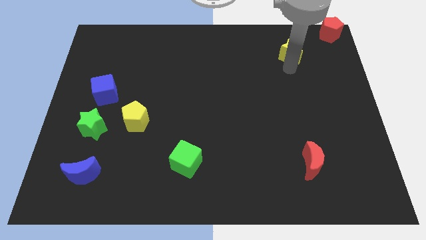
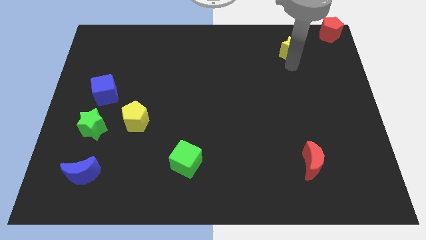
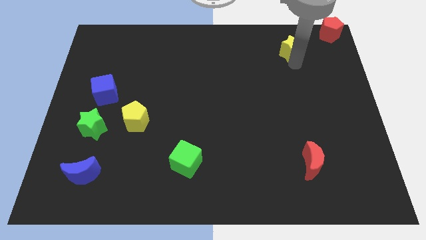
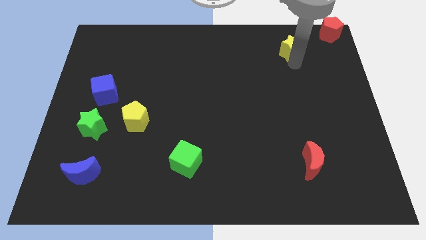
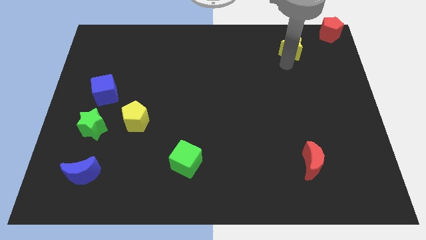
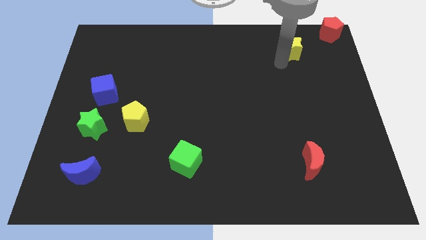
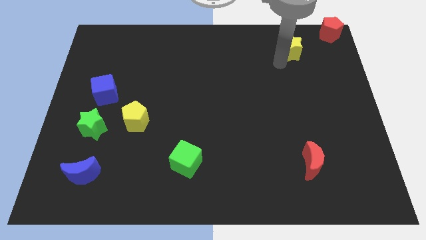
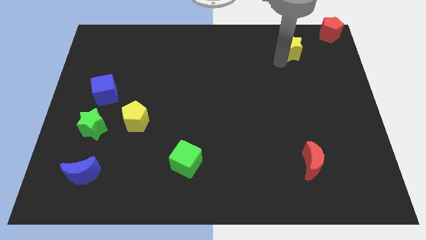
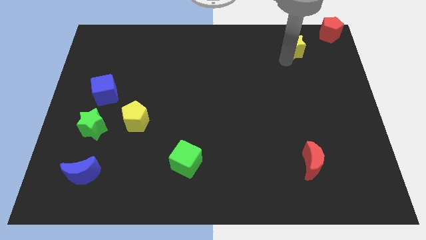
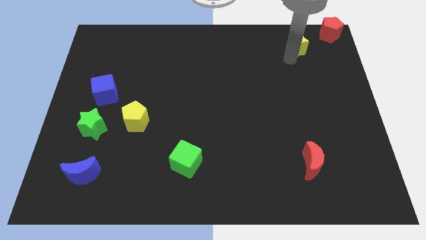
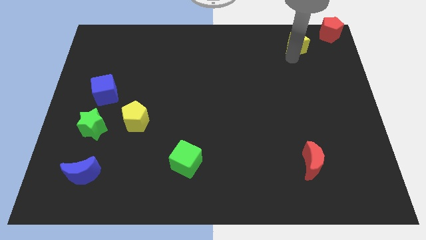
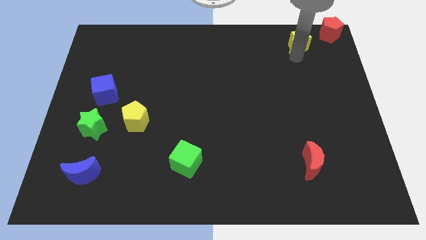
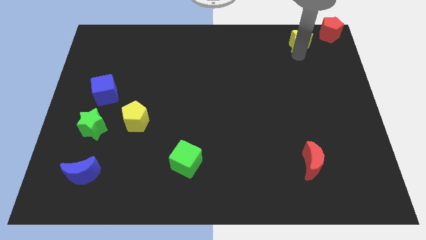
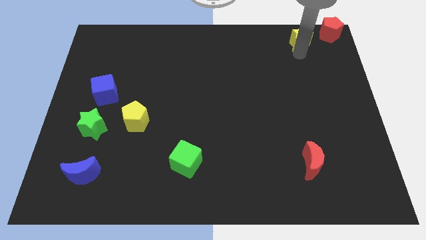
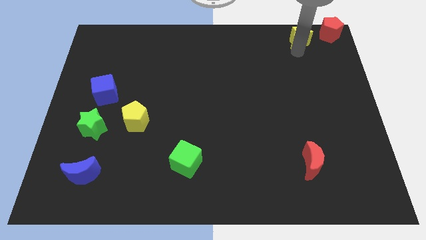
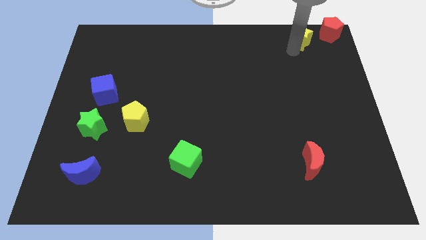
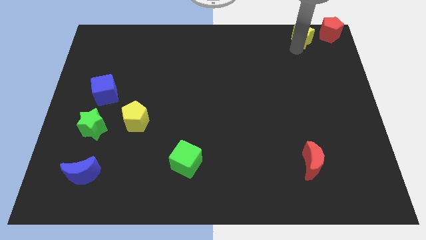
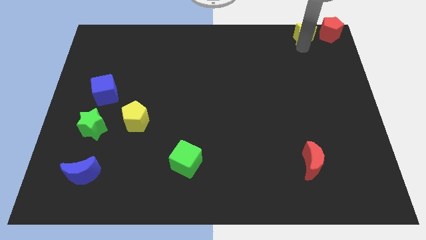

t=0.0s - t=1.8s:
move the yellow star to the top right corner of the board

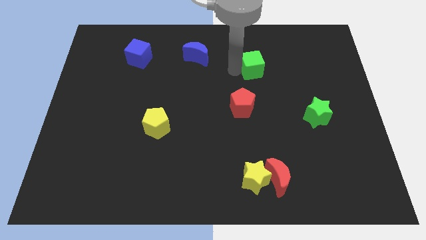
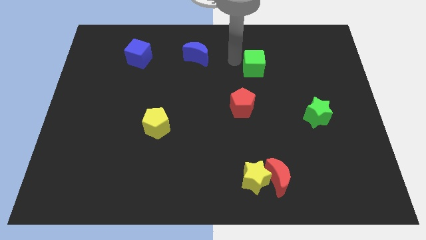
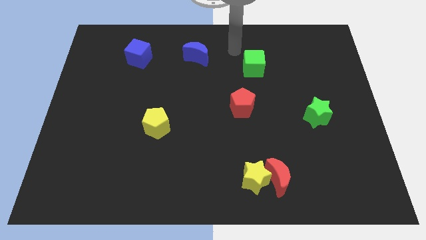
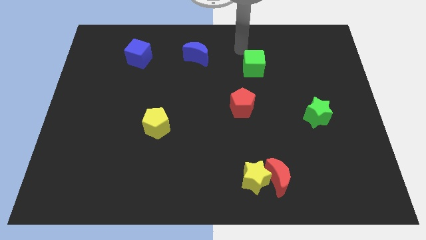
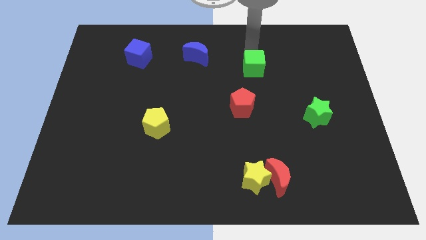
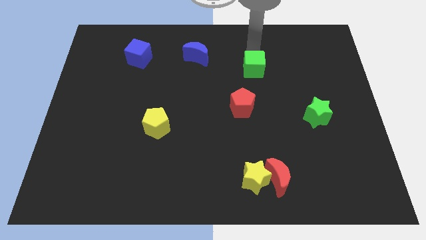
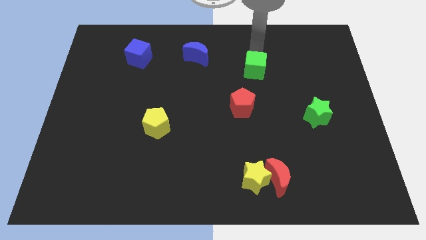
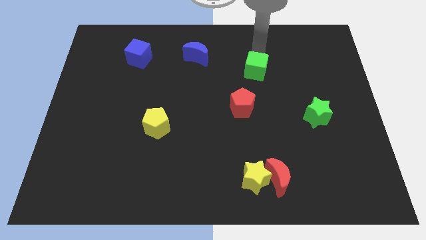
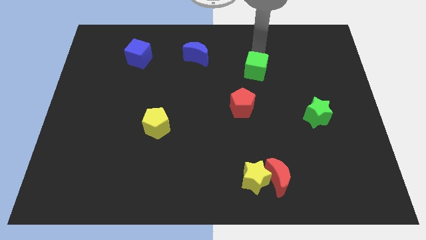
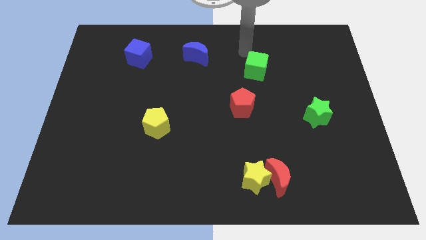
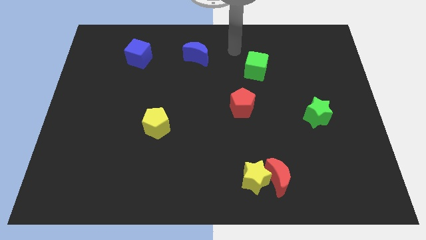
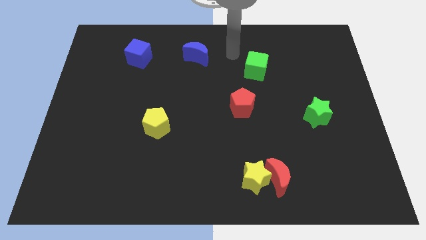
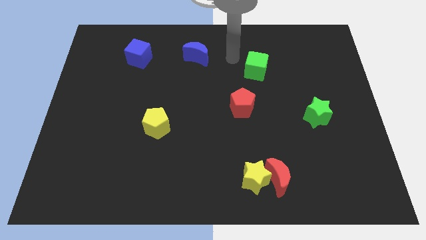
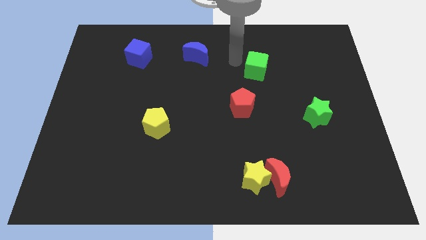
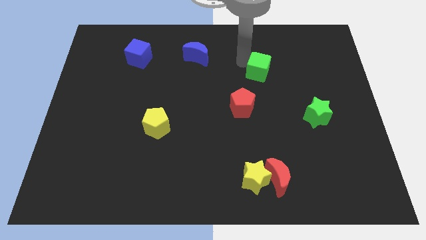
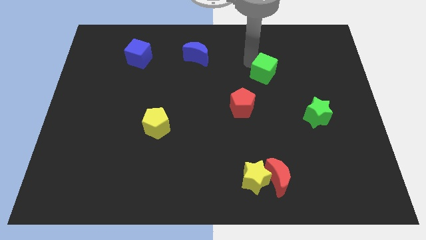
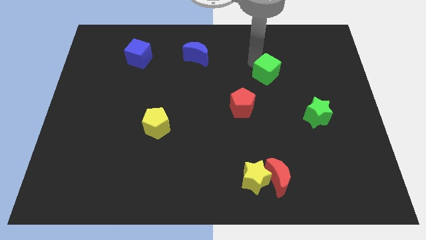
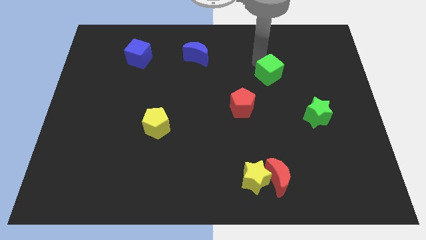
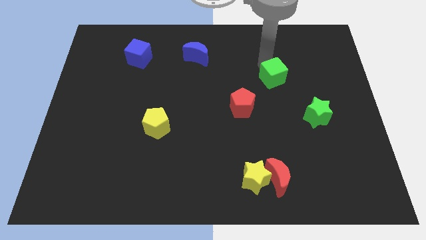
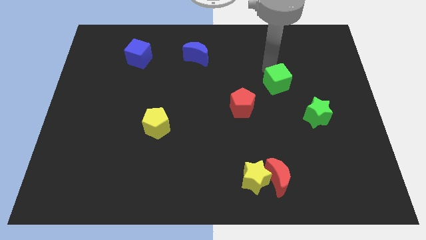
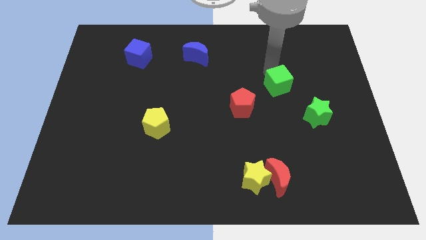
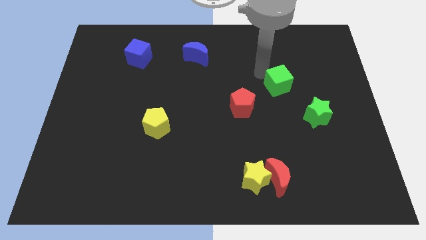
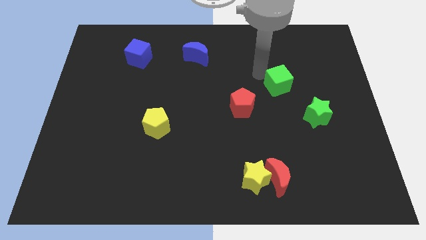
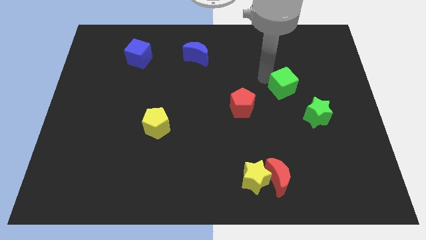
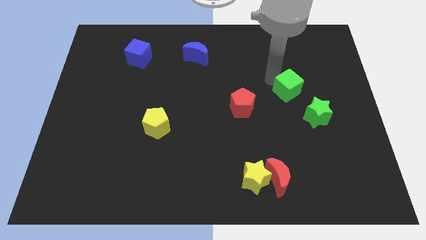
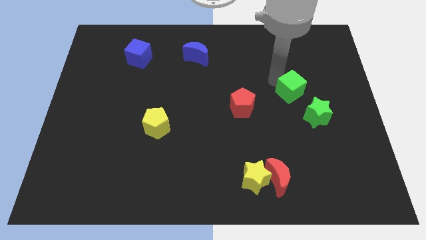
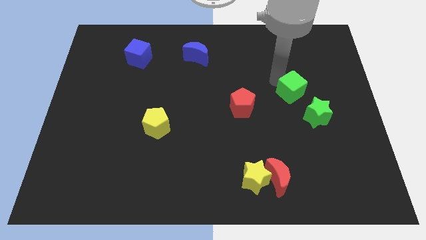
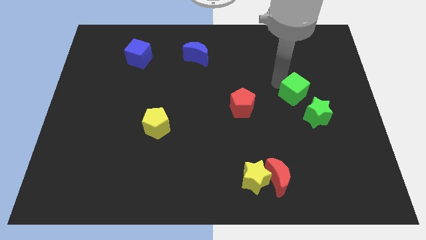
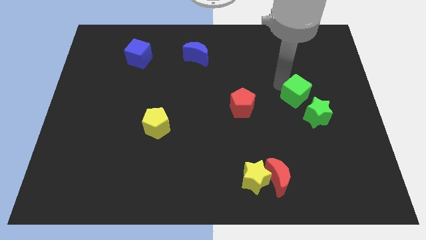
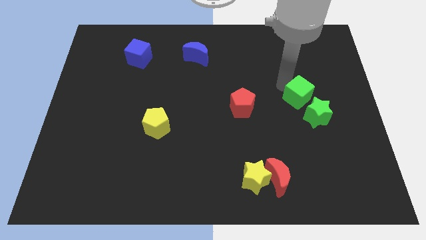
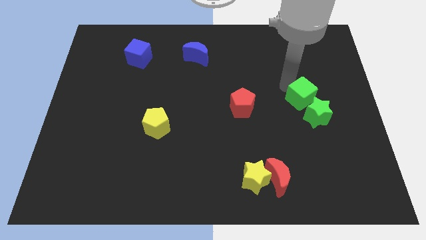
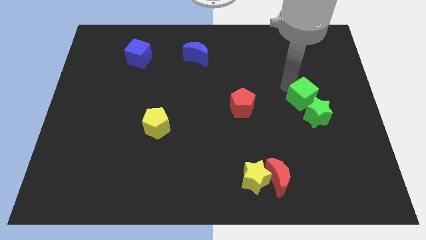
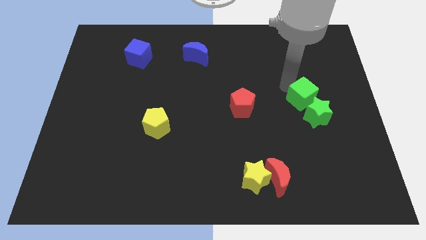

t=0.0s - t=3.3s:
push the green close to the top side of the green star

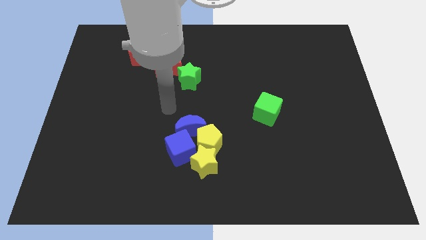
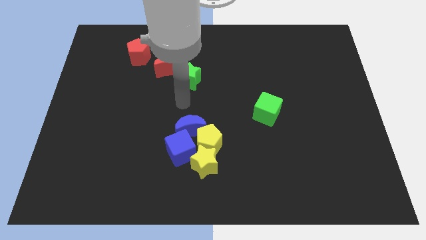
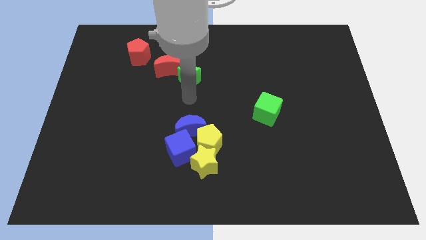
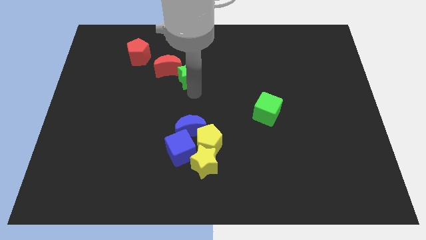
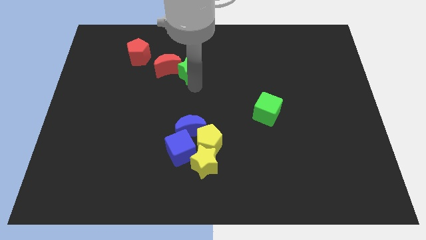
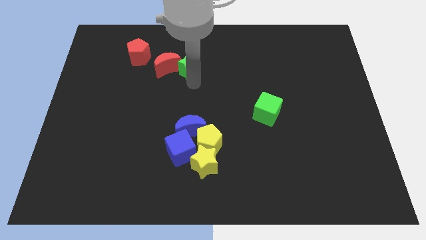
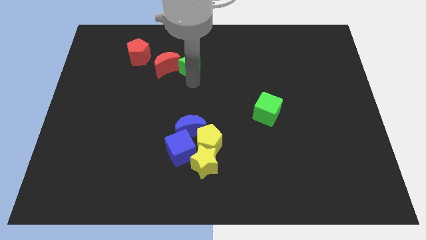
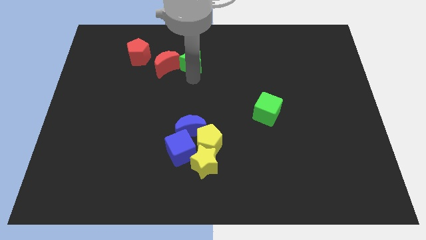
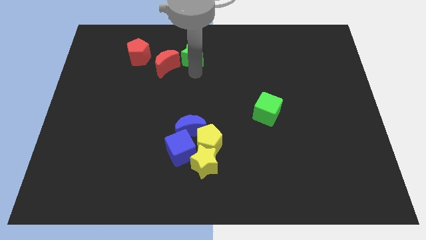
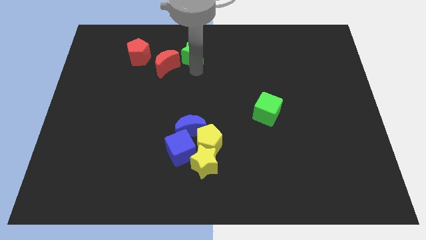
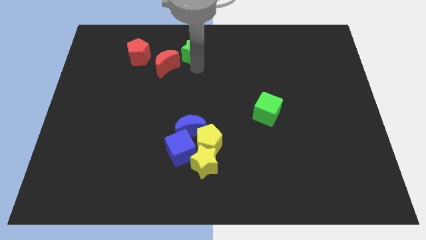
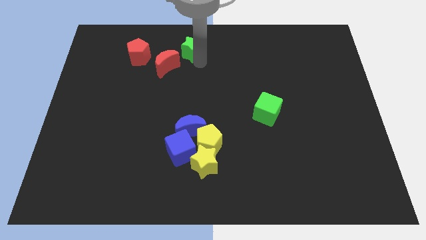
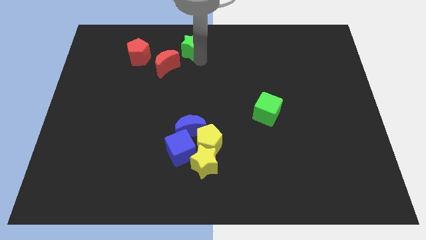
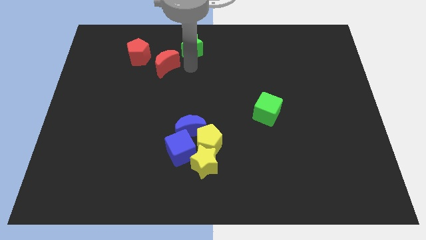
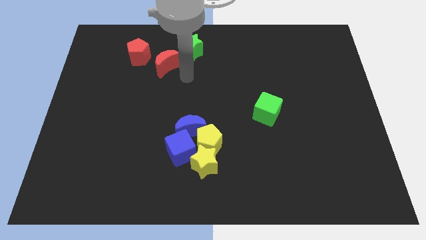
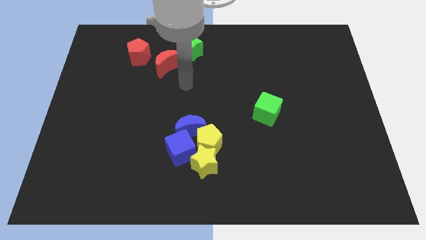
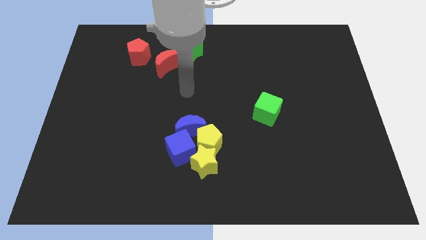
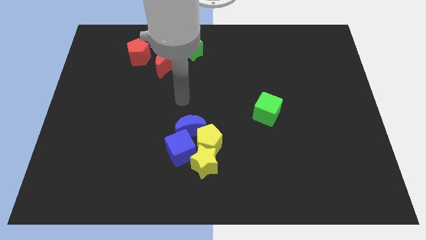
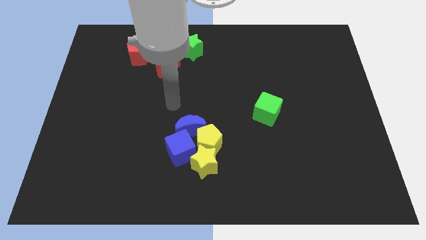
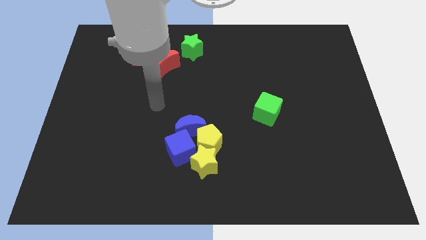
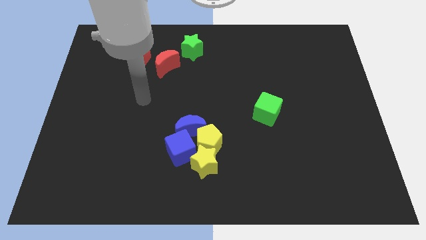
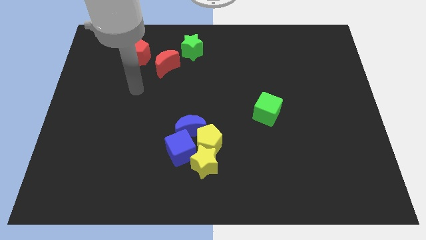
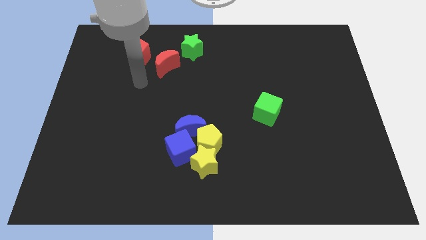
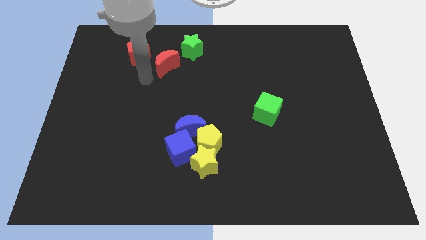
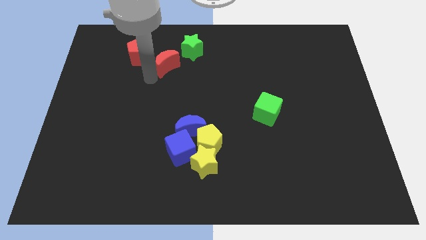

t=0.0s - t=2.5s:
move the green star away from the red crescent

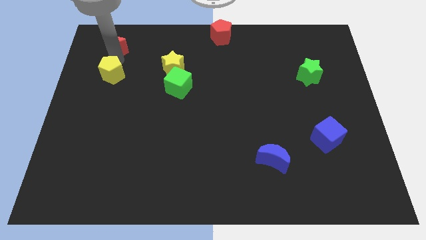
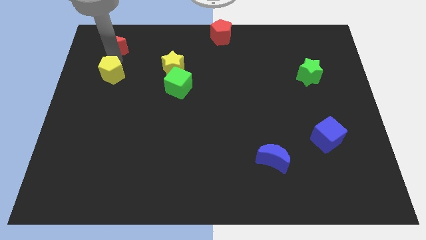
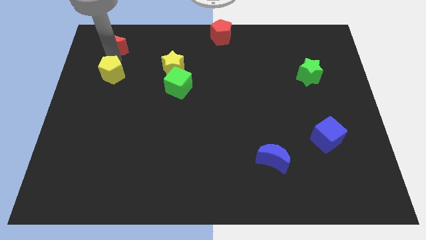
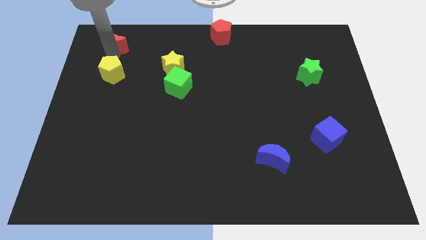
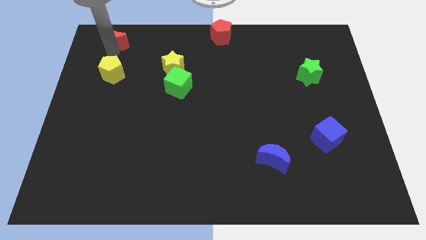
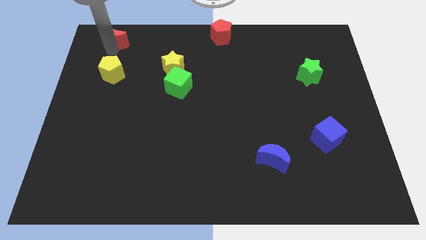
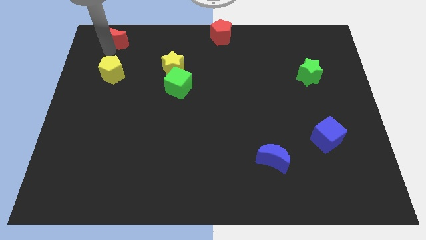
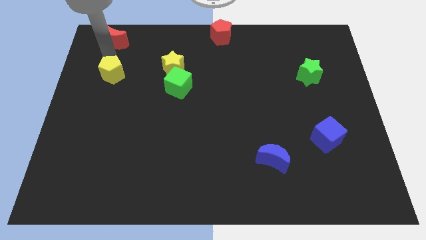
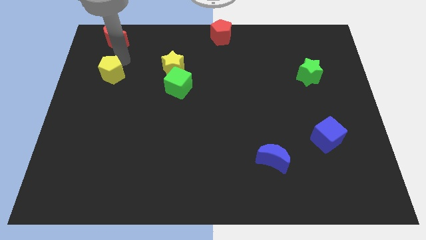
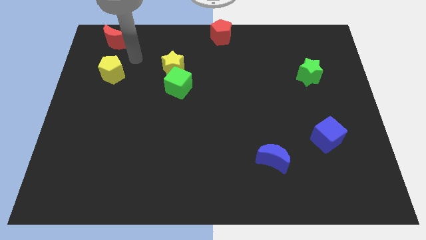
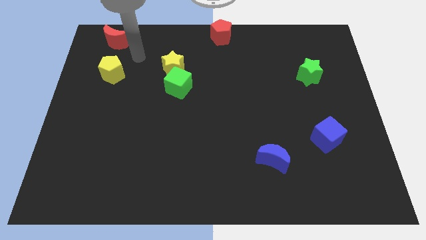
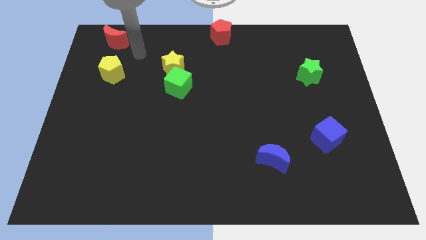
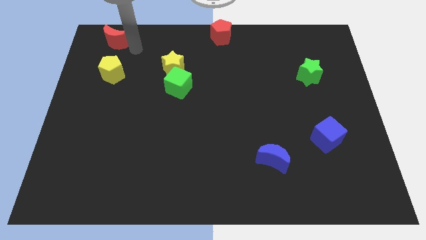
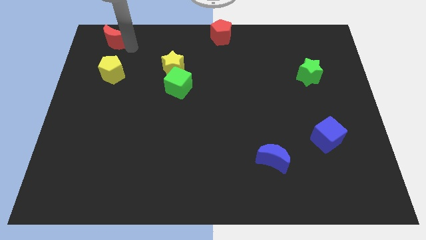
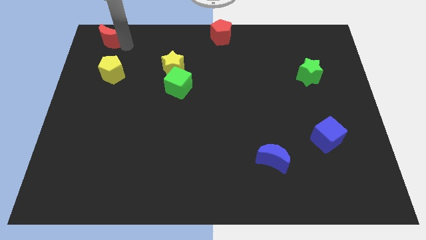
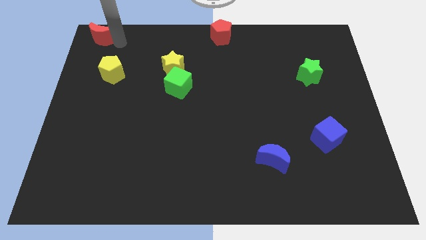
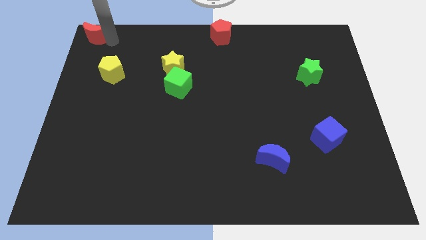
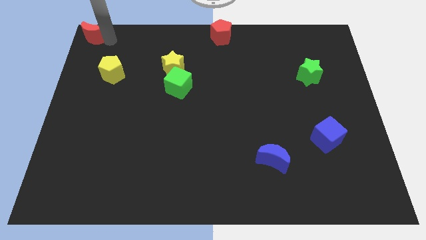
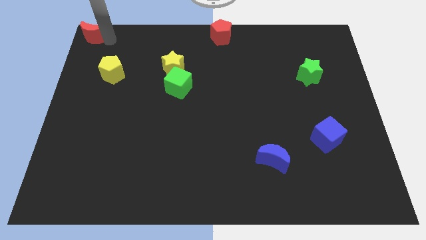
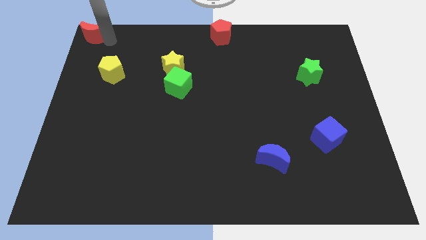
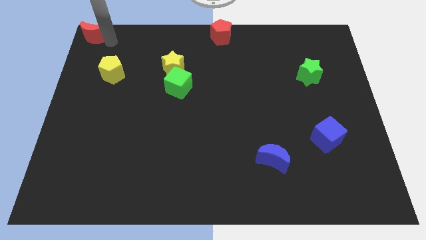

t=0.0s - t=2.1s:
place the red moon to the top left corner
